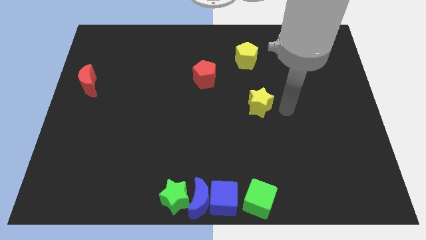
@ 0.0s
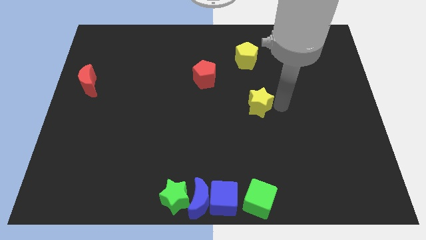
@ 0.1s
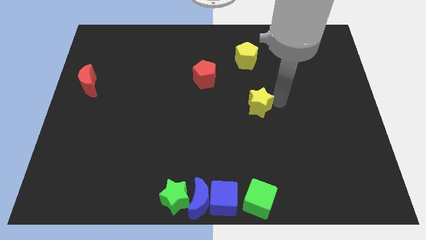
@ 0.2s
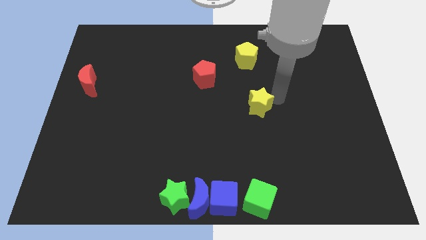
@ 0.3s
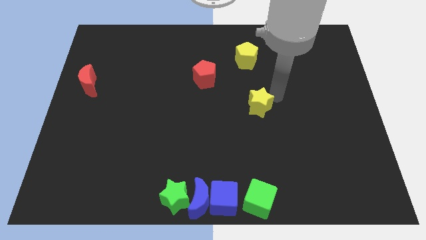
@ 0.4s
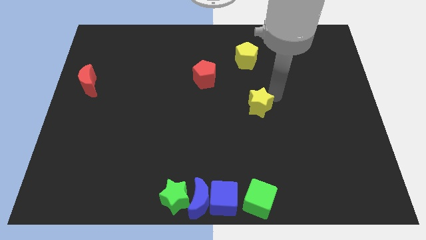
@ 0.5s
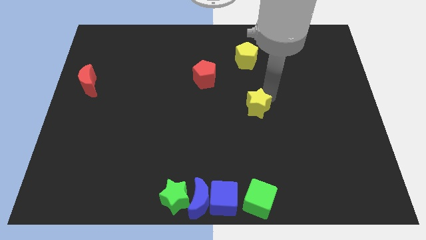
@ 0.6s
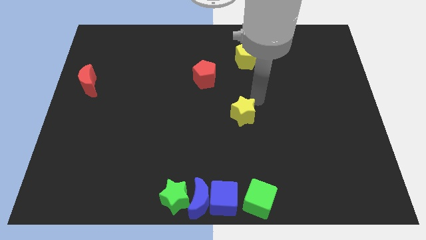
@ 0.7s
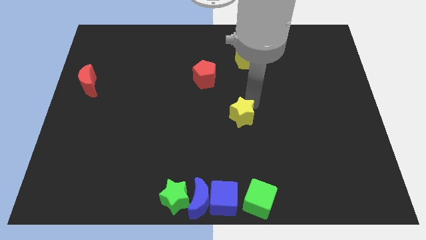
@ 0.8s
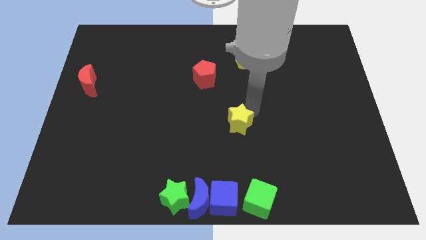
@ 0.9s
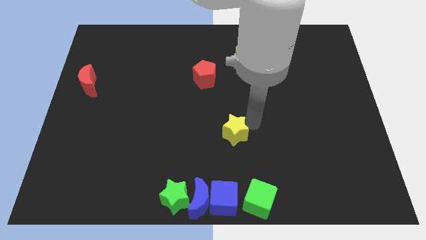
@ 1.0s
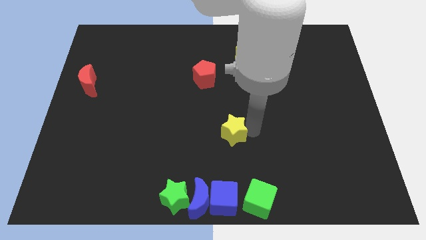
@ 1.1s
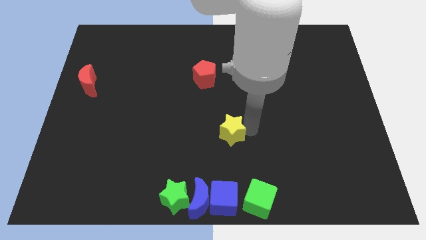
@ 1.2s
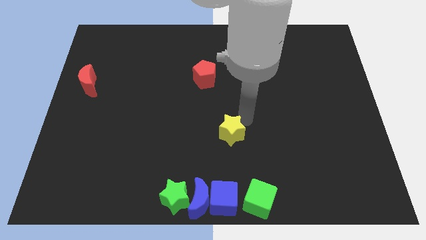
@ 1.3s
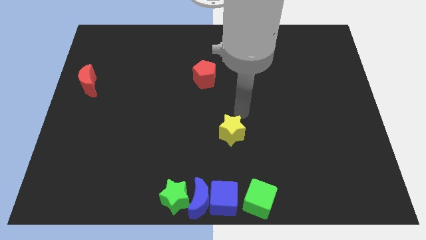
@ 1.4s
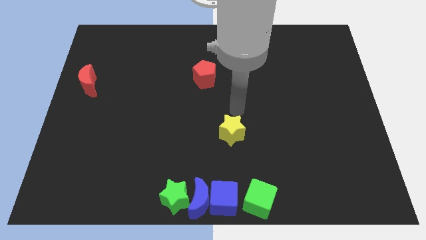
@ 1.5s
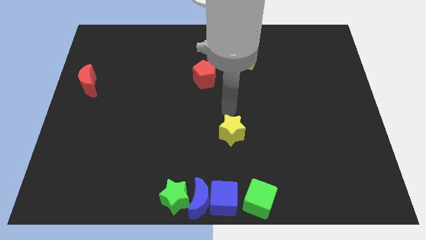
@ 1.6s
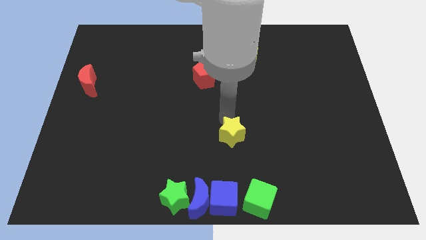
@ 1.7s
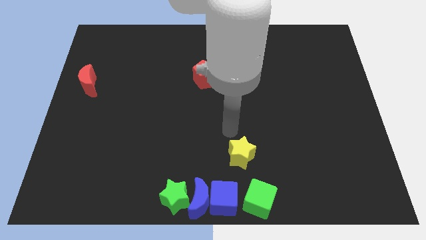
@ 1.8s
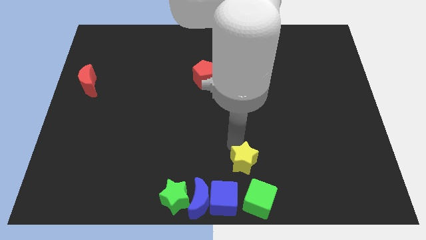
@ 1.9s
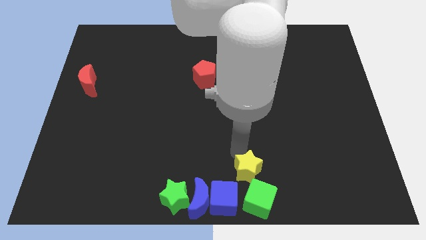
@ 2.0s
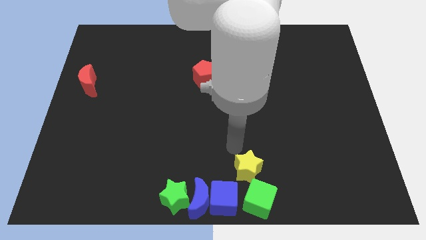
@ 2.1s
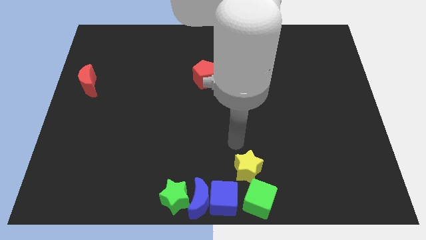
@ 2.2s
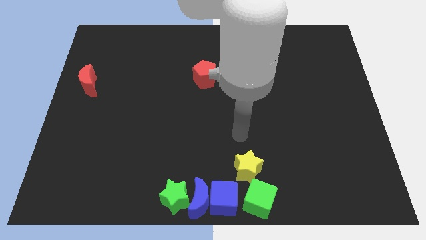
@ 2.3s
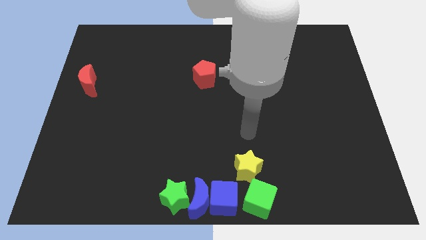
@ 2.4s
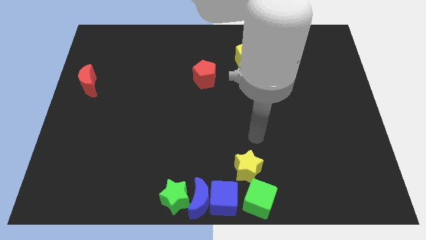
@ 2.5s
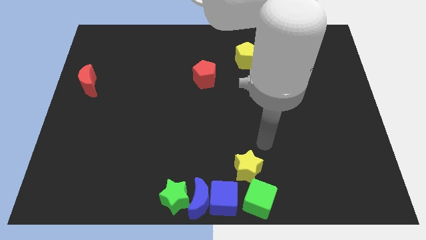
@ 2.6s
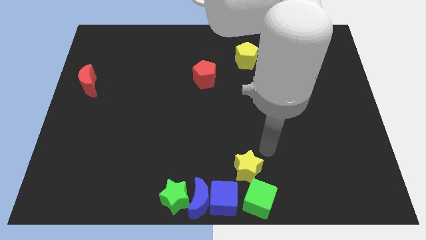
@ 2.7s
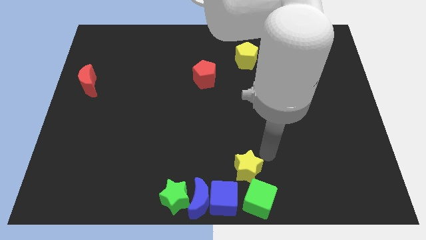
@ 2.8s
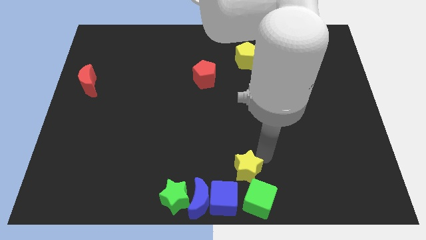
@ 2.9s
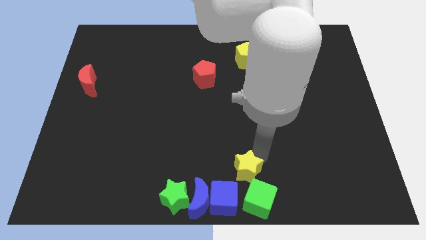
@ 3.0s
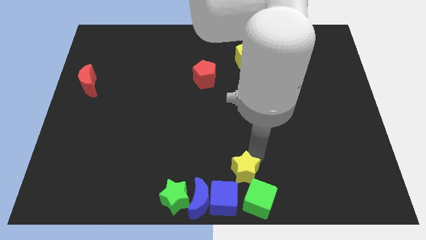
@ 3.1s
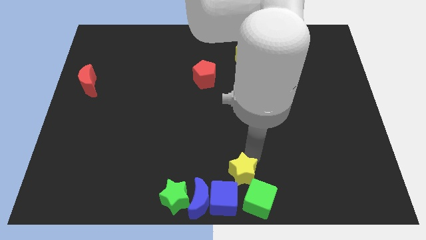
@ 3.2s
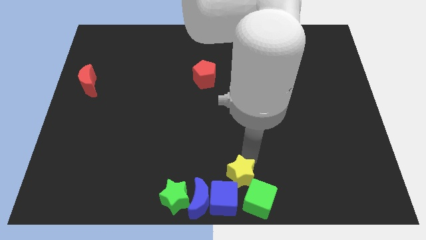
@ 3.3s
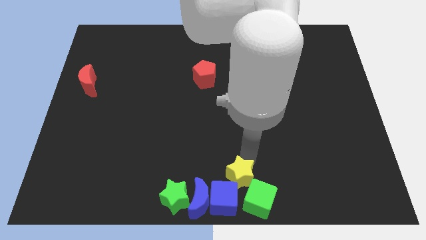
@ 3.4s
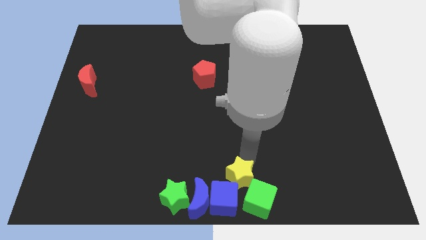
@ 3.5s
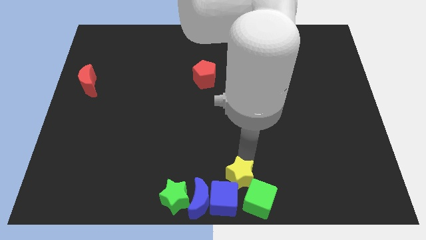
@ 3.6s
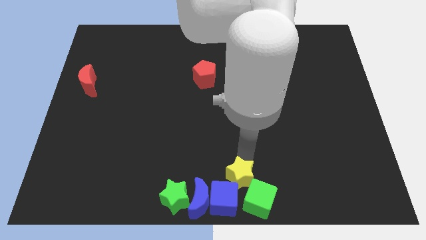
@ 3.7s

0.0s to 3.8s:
push the yellow star into the group of blocks

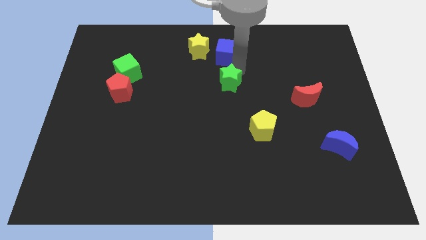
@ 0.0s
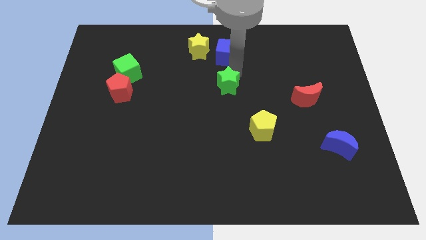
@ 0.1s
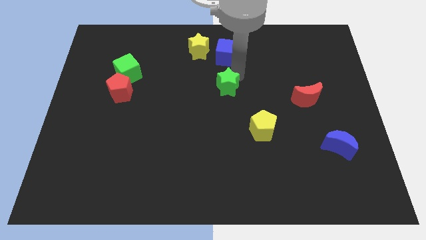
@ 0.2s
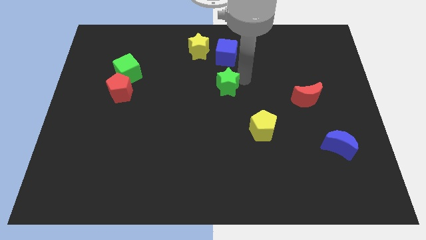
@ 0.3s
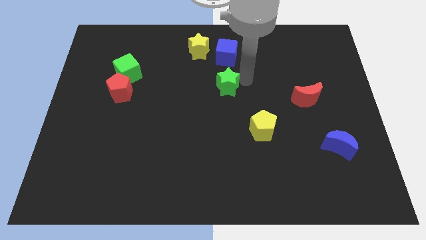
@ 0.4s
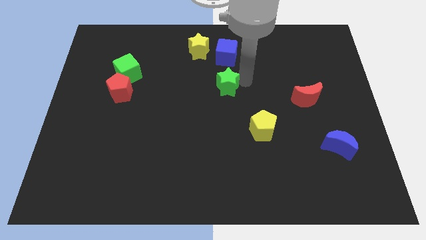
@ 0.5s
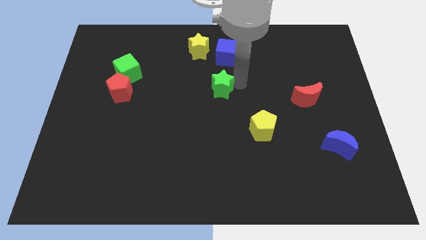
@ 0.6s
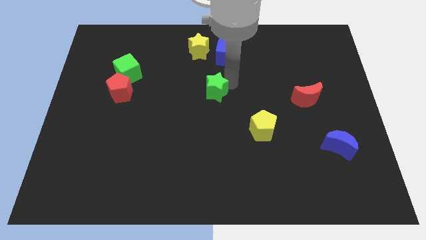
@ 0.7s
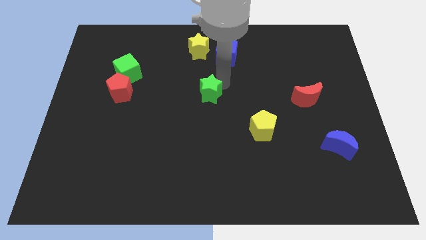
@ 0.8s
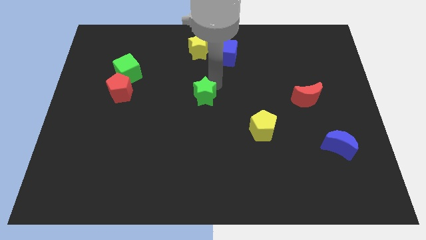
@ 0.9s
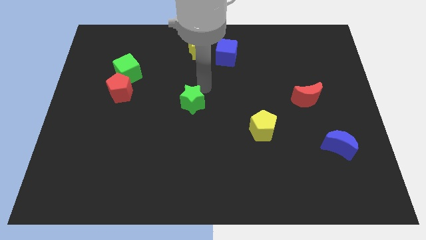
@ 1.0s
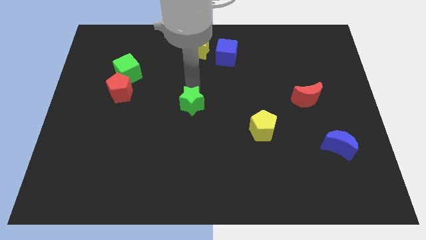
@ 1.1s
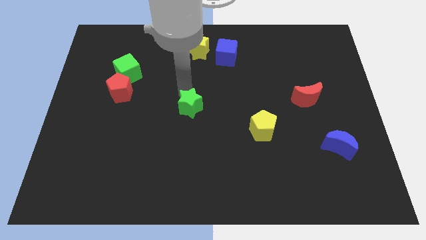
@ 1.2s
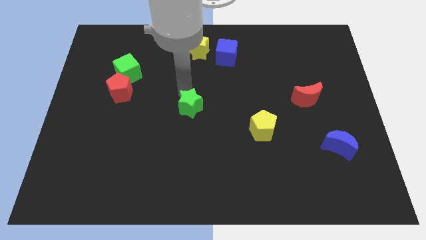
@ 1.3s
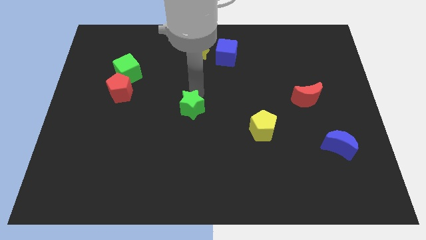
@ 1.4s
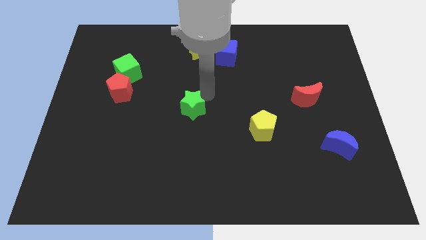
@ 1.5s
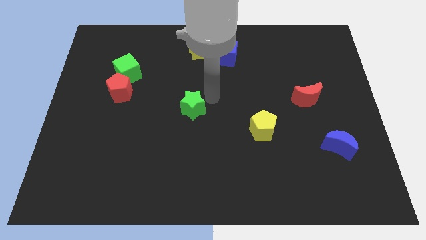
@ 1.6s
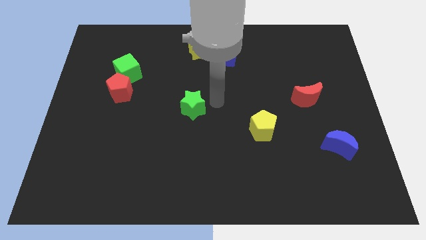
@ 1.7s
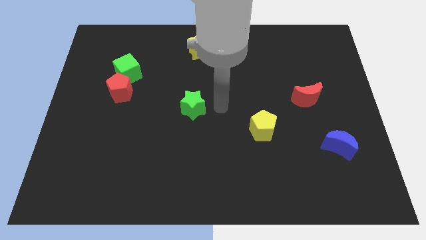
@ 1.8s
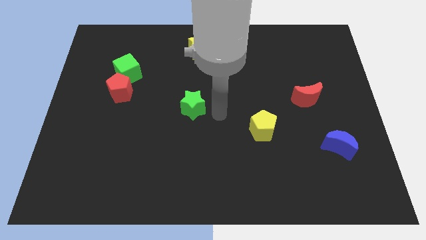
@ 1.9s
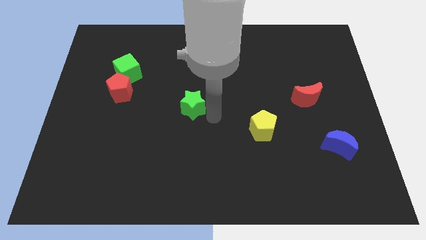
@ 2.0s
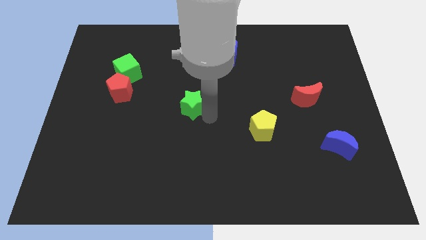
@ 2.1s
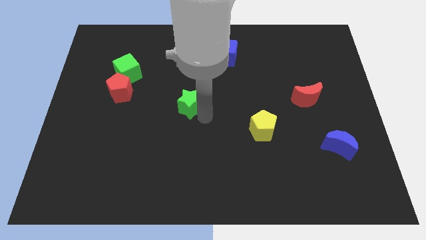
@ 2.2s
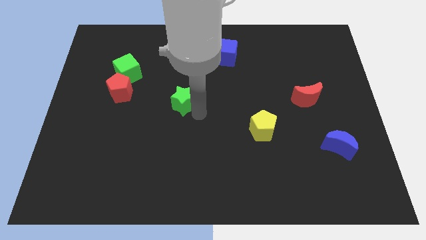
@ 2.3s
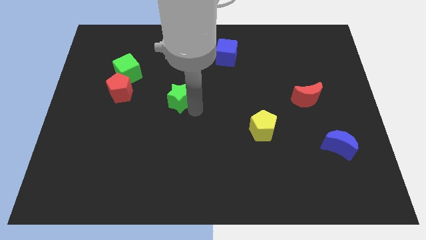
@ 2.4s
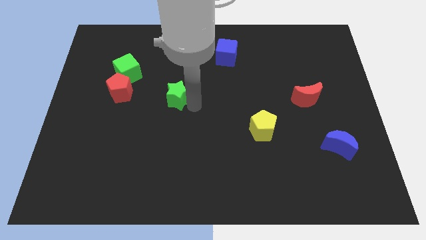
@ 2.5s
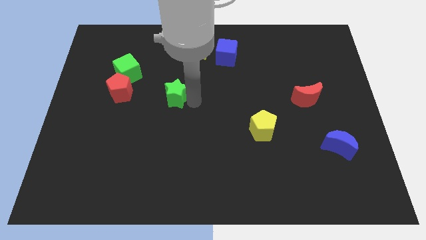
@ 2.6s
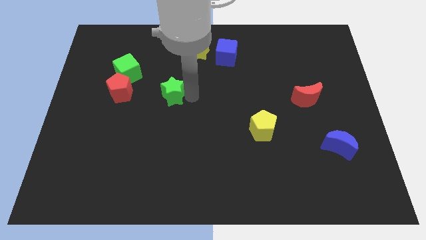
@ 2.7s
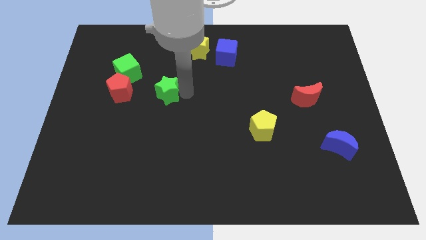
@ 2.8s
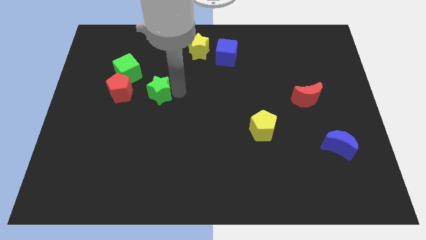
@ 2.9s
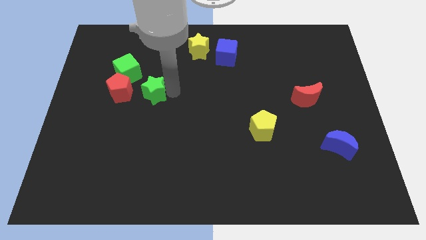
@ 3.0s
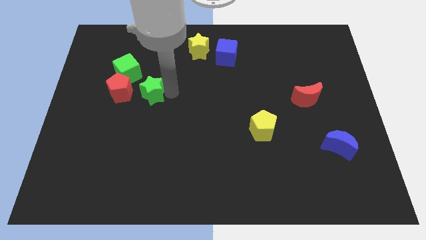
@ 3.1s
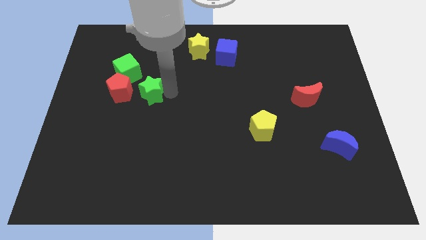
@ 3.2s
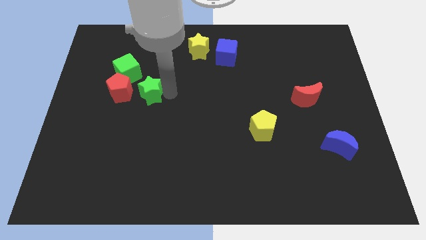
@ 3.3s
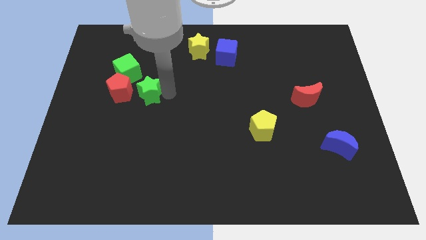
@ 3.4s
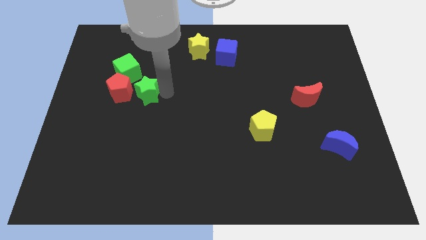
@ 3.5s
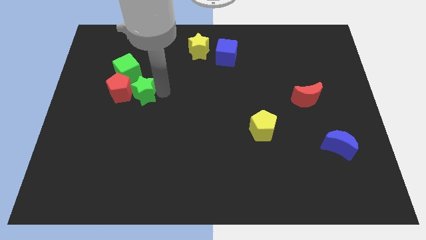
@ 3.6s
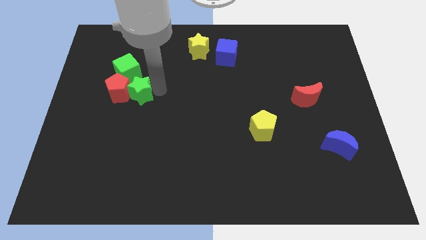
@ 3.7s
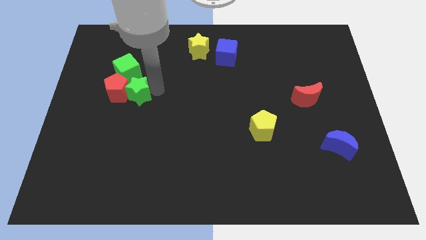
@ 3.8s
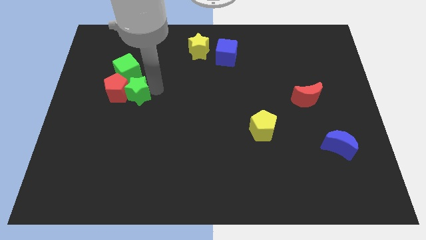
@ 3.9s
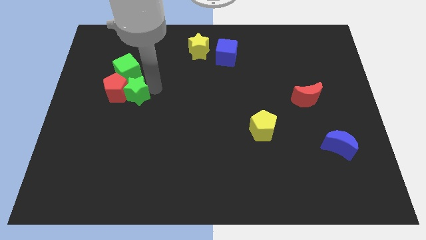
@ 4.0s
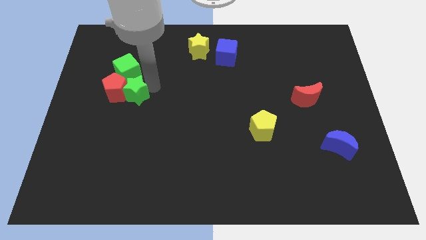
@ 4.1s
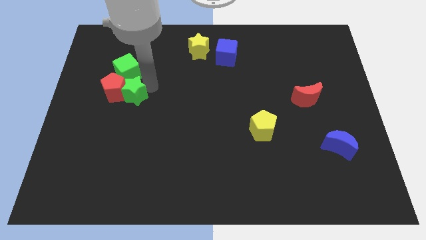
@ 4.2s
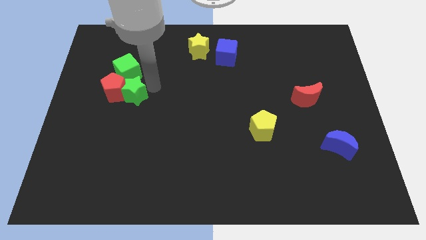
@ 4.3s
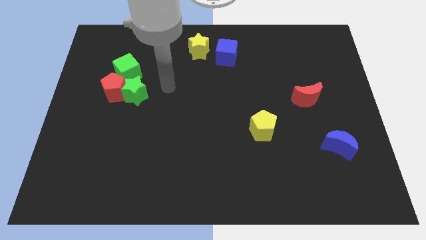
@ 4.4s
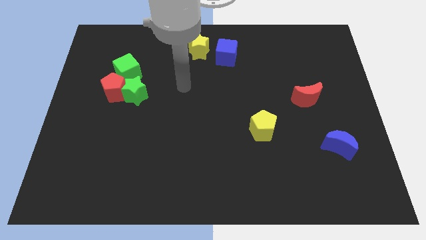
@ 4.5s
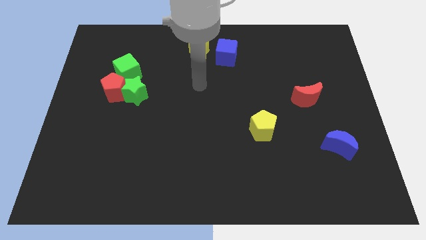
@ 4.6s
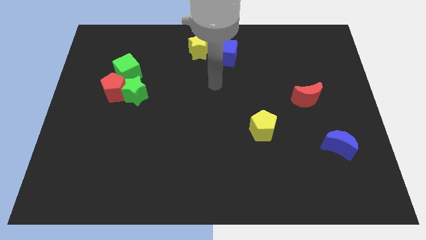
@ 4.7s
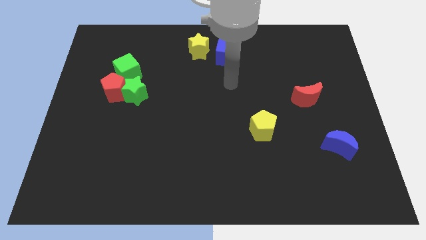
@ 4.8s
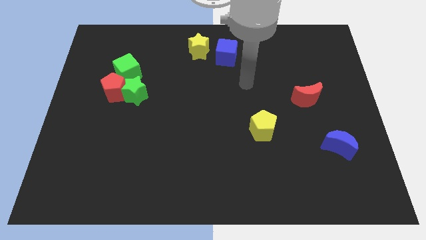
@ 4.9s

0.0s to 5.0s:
push the green star into the red pentagon

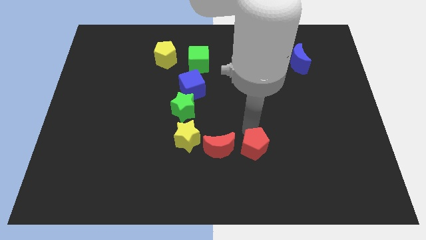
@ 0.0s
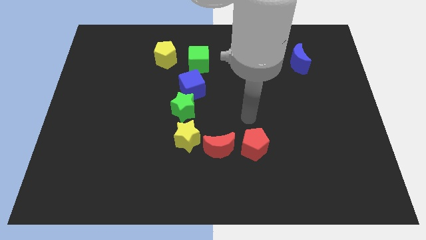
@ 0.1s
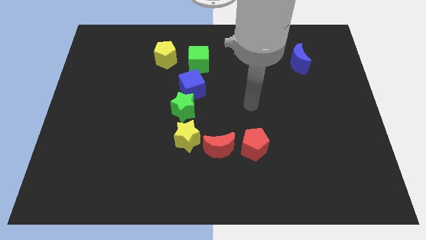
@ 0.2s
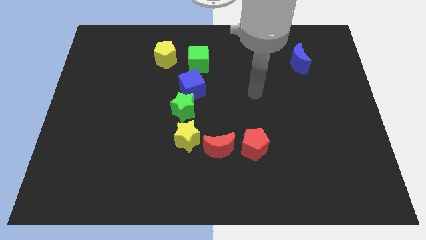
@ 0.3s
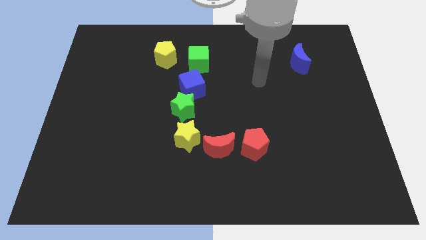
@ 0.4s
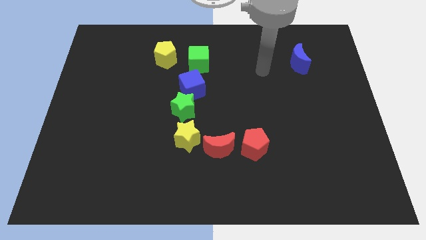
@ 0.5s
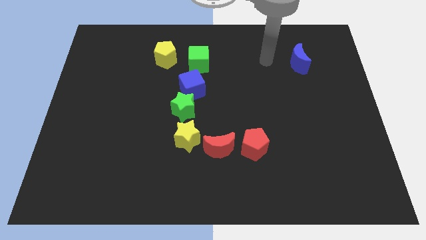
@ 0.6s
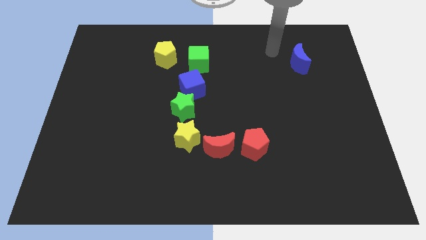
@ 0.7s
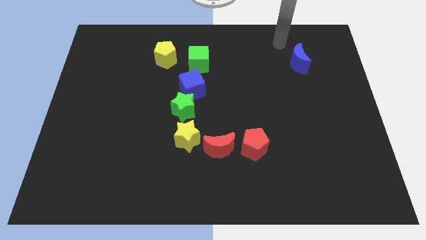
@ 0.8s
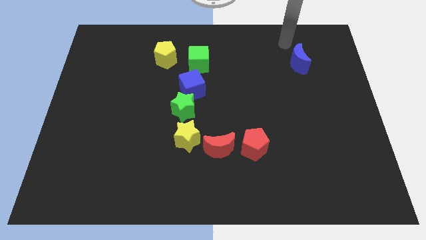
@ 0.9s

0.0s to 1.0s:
move your hand away from the red pentagon
